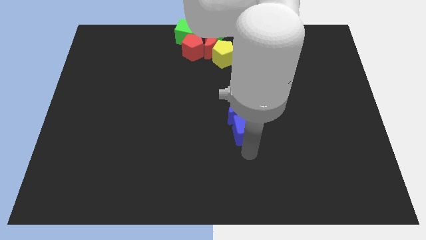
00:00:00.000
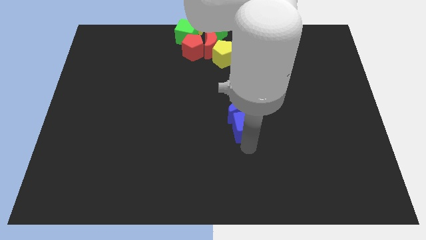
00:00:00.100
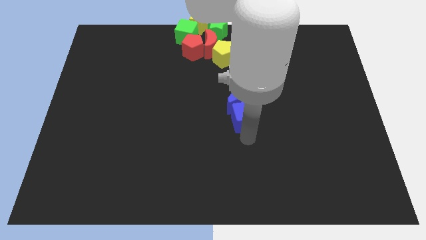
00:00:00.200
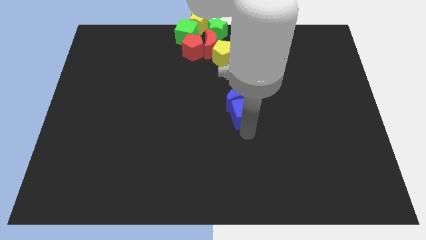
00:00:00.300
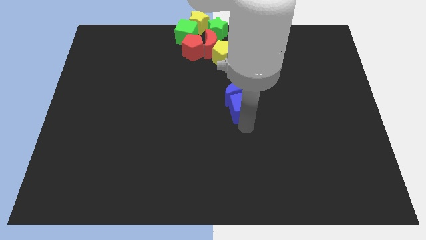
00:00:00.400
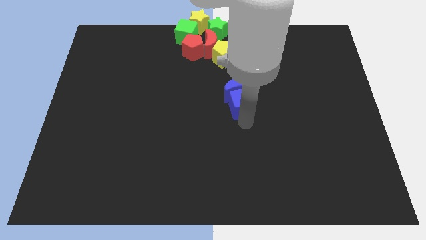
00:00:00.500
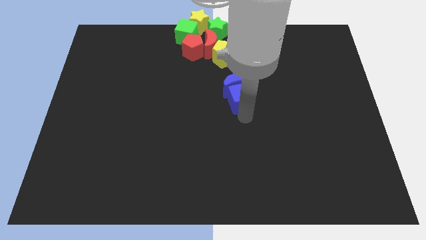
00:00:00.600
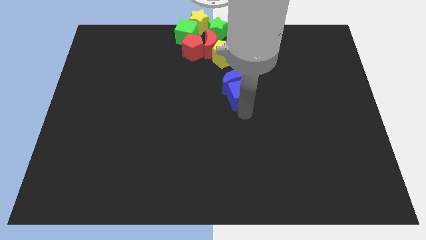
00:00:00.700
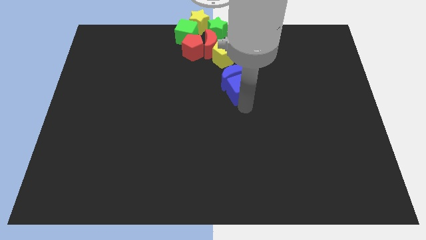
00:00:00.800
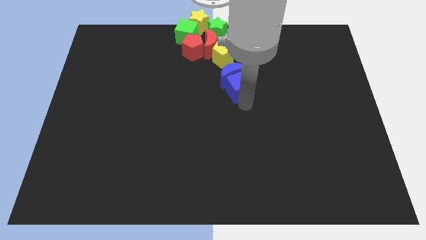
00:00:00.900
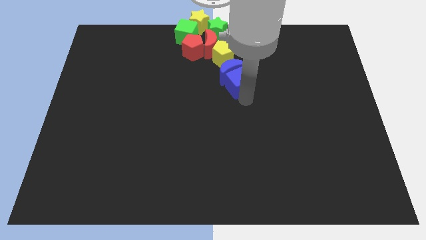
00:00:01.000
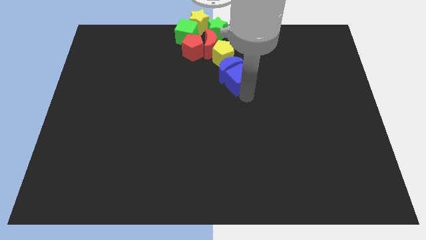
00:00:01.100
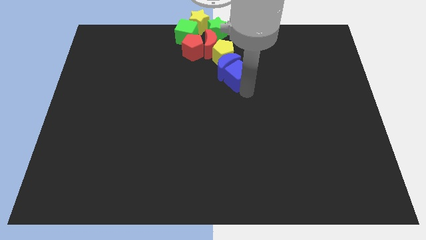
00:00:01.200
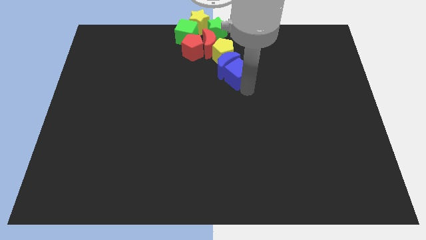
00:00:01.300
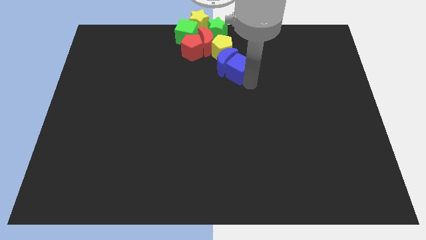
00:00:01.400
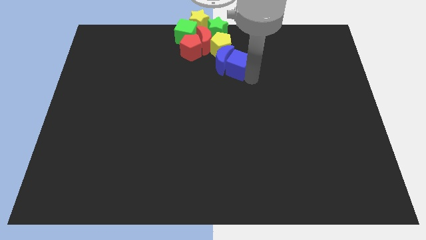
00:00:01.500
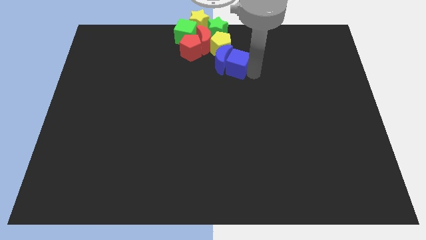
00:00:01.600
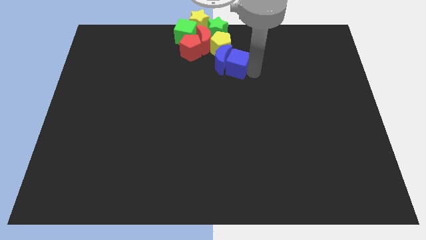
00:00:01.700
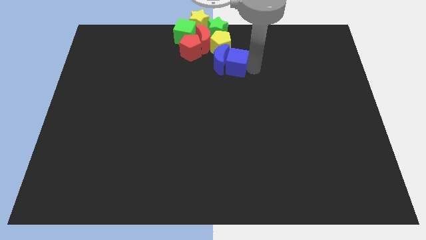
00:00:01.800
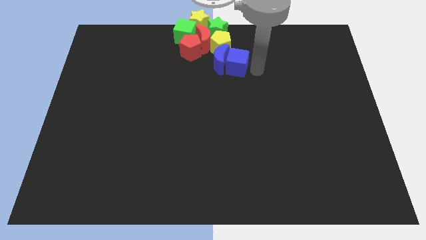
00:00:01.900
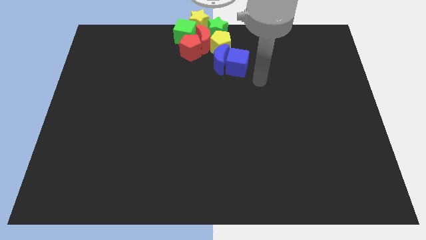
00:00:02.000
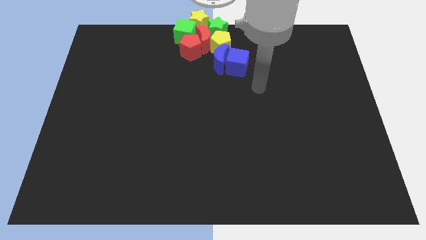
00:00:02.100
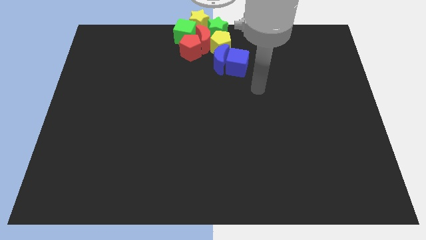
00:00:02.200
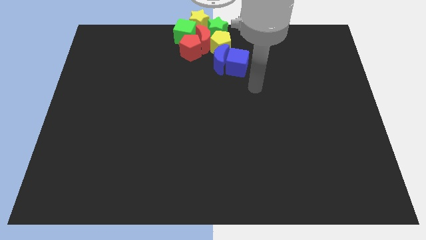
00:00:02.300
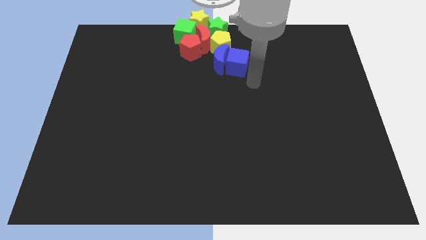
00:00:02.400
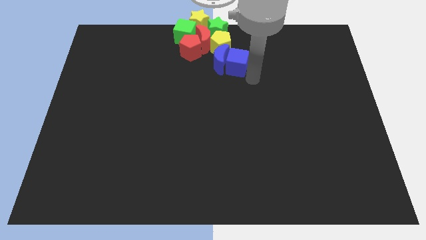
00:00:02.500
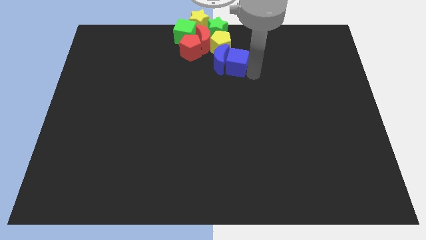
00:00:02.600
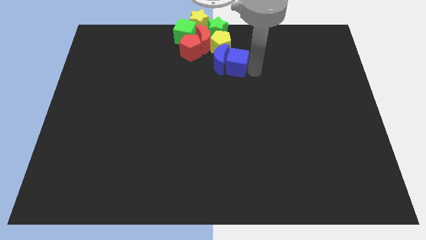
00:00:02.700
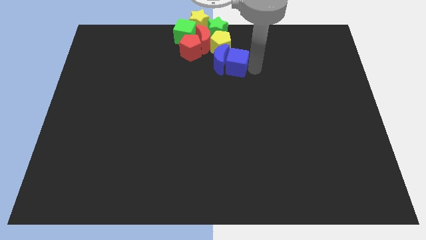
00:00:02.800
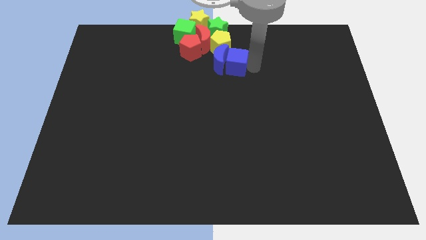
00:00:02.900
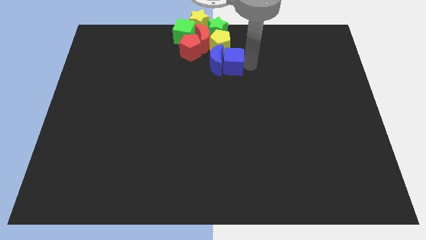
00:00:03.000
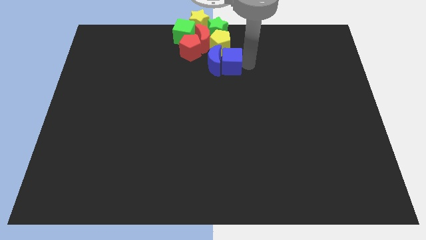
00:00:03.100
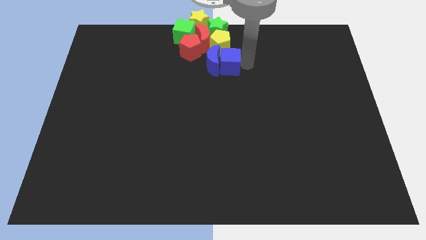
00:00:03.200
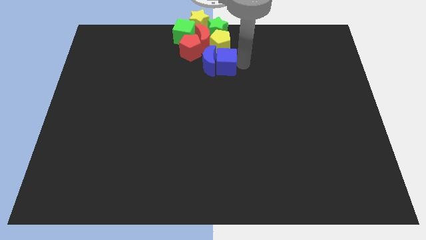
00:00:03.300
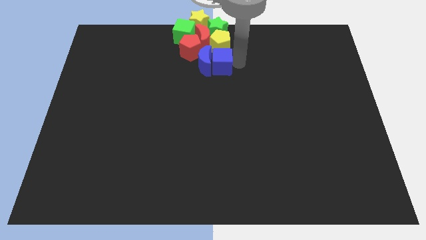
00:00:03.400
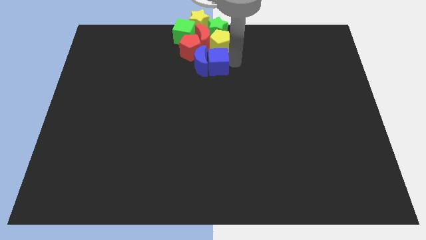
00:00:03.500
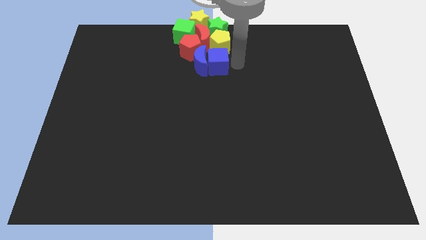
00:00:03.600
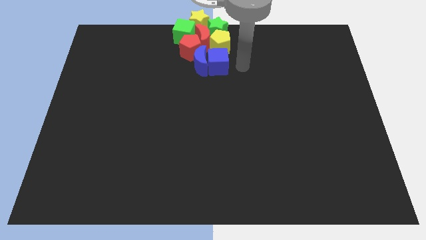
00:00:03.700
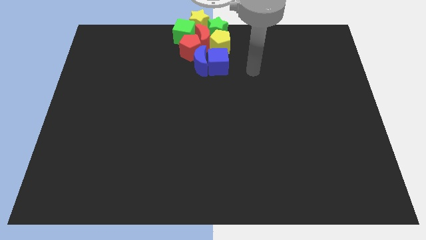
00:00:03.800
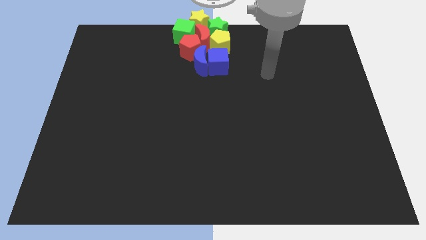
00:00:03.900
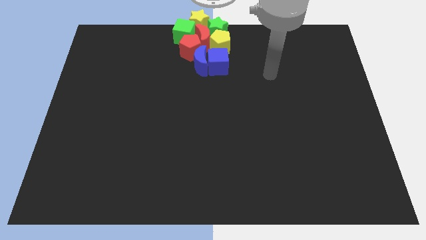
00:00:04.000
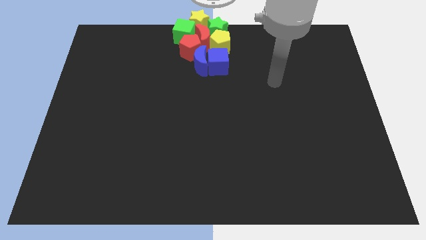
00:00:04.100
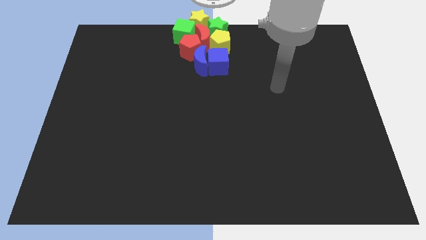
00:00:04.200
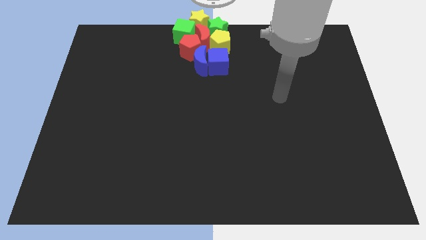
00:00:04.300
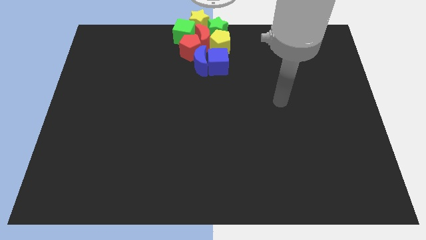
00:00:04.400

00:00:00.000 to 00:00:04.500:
push the blue objects into the group of objects at center top

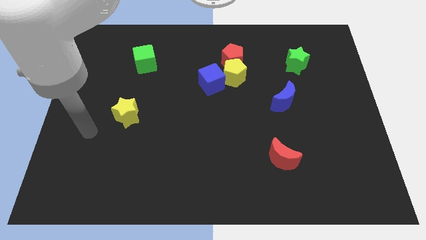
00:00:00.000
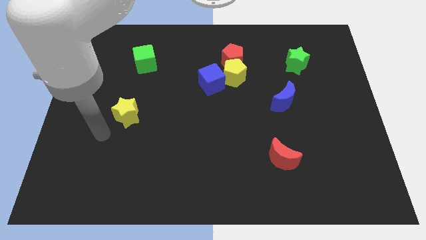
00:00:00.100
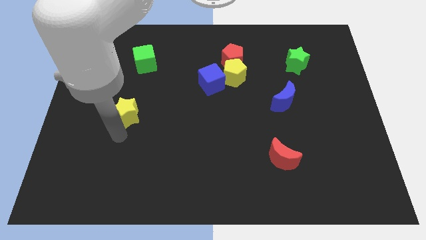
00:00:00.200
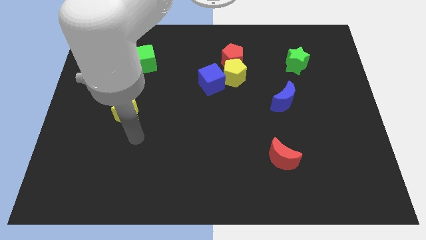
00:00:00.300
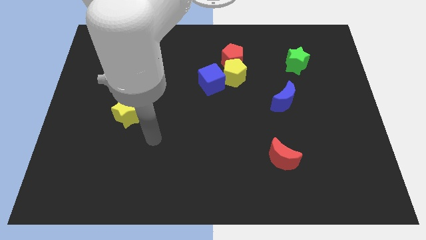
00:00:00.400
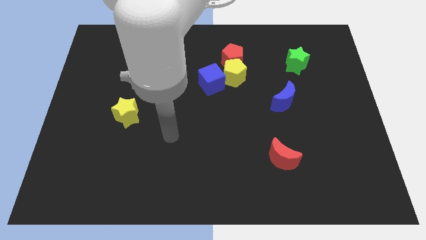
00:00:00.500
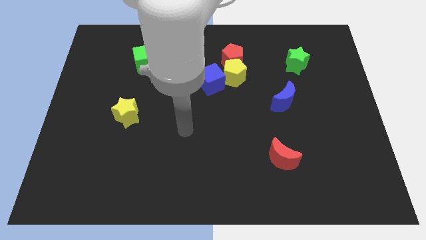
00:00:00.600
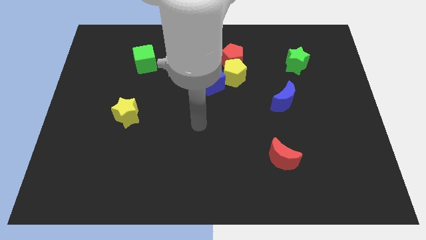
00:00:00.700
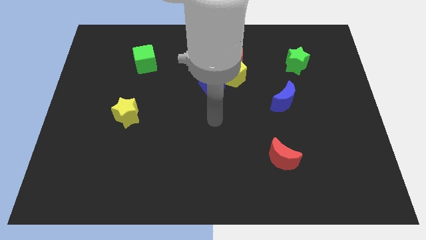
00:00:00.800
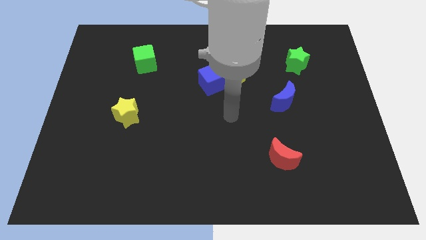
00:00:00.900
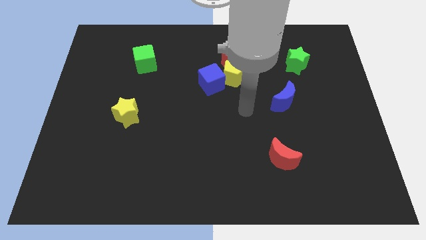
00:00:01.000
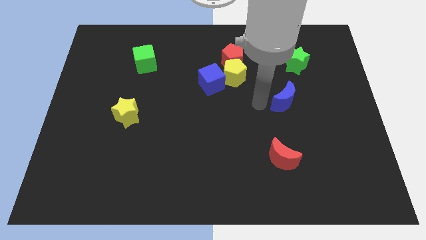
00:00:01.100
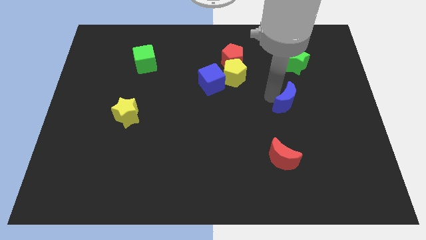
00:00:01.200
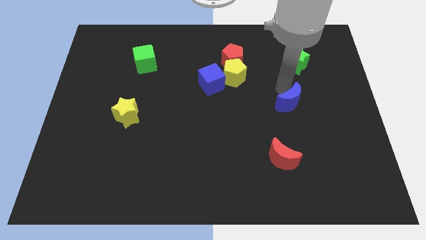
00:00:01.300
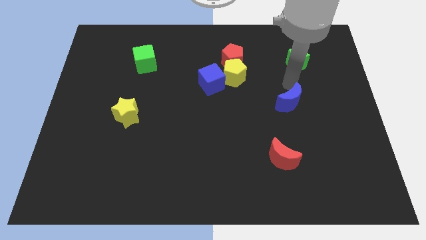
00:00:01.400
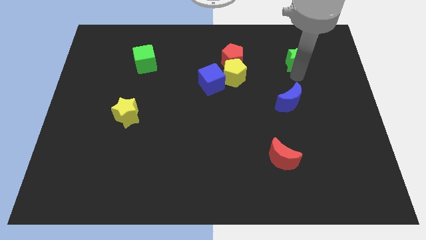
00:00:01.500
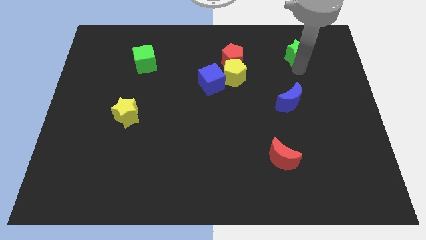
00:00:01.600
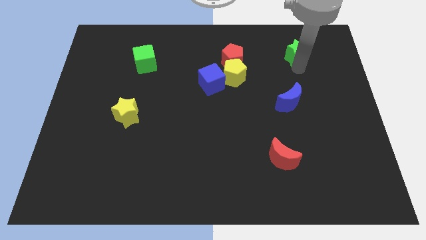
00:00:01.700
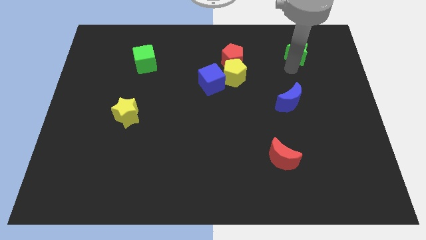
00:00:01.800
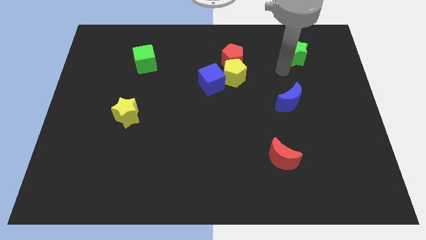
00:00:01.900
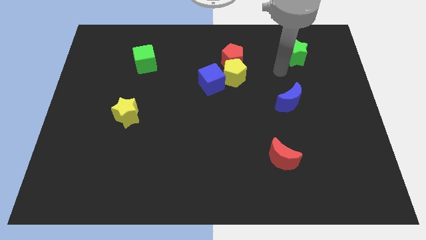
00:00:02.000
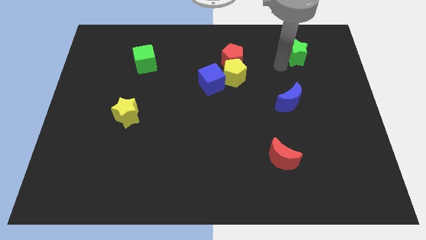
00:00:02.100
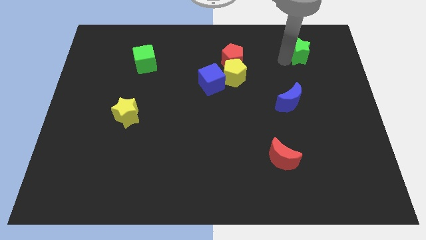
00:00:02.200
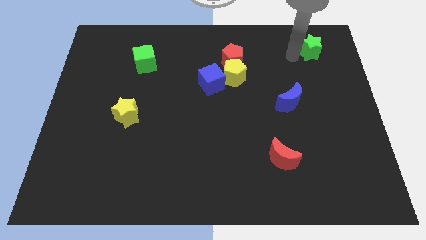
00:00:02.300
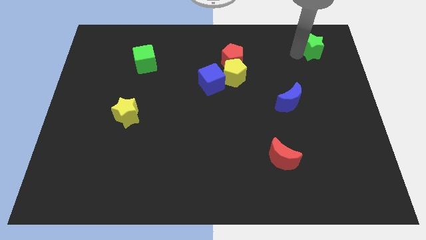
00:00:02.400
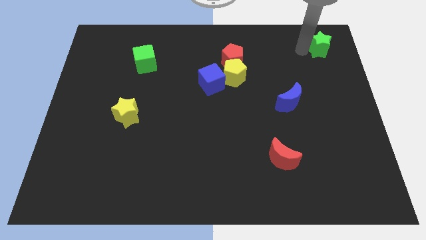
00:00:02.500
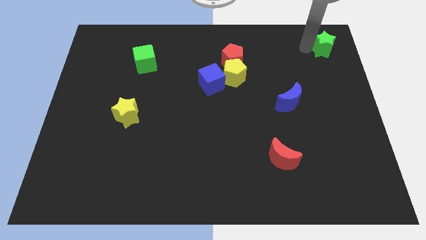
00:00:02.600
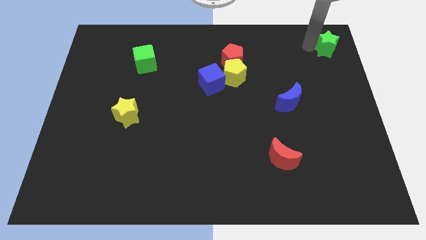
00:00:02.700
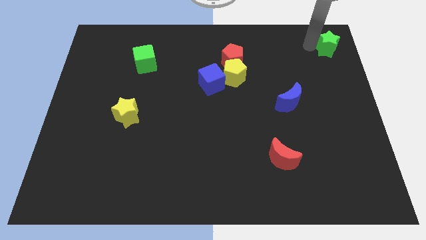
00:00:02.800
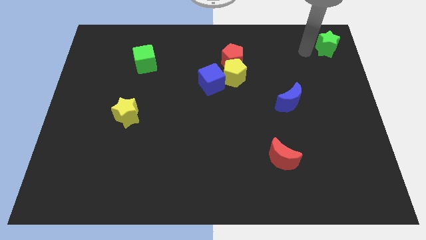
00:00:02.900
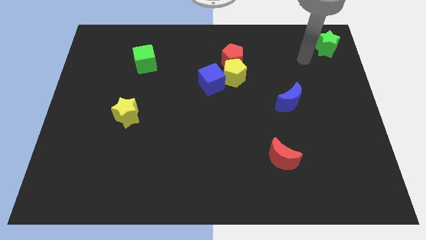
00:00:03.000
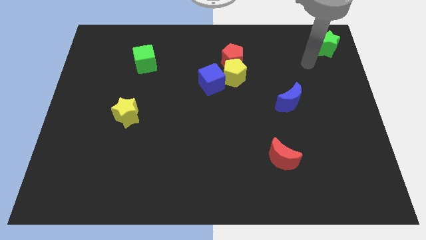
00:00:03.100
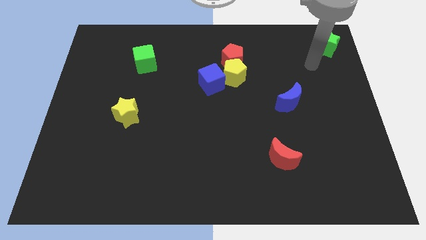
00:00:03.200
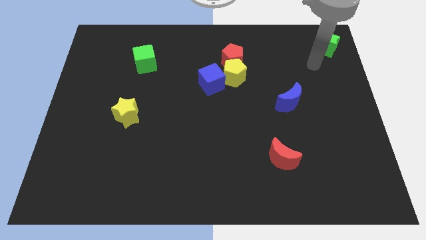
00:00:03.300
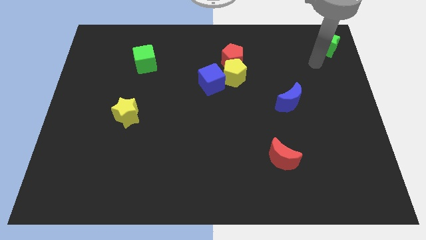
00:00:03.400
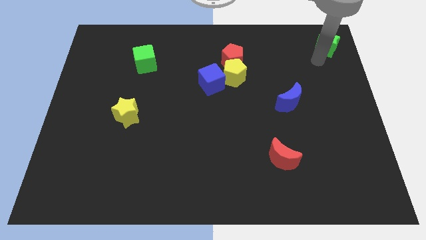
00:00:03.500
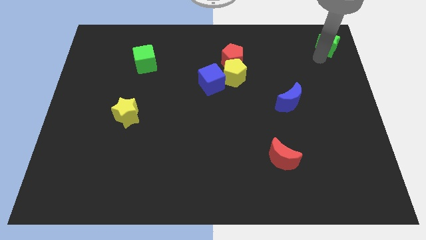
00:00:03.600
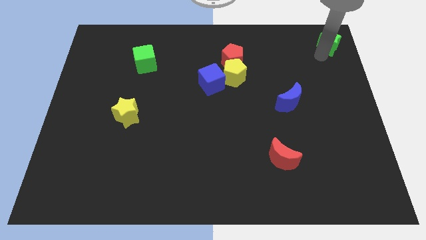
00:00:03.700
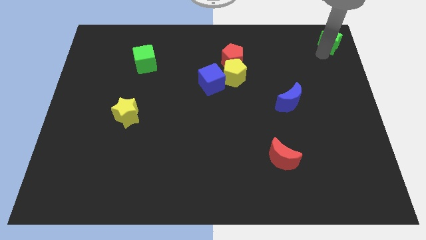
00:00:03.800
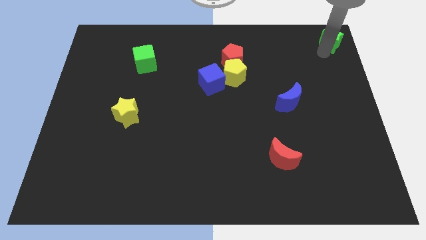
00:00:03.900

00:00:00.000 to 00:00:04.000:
push the green star diagonally to blue moon

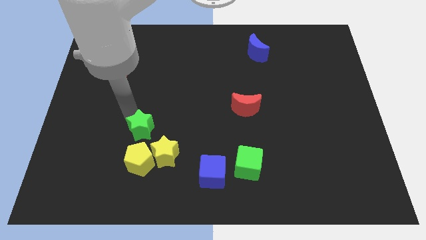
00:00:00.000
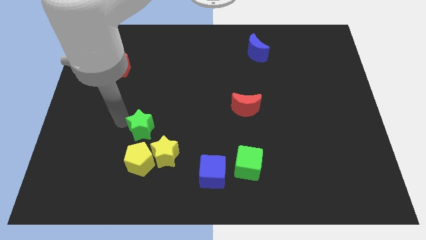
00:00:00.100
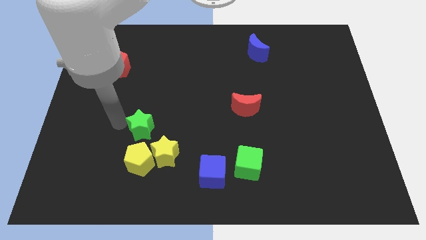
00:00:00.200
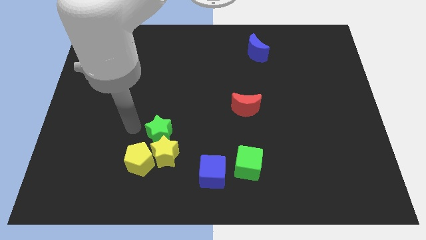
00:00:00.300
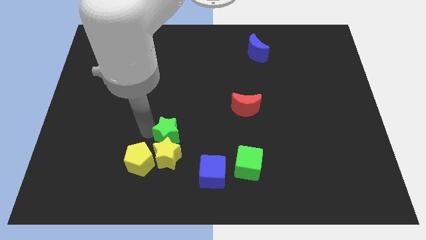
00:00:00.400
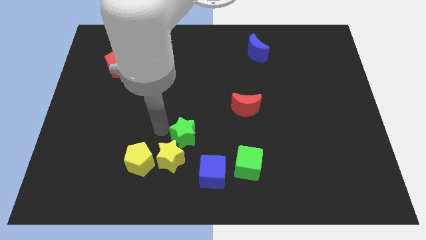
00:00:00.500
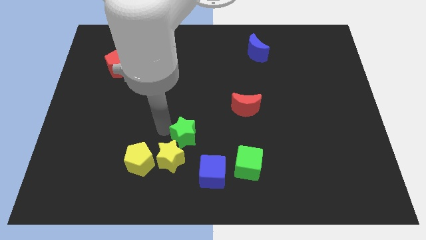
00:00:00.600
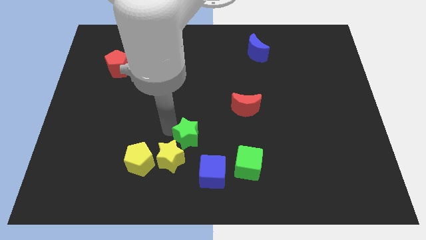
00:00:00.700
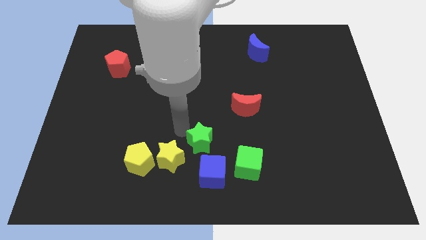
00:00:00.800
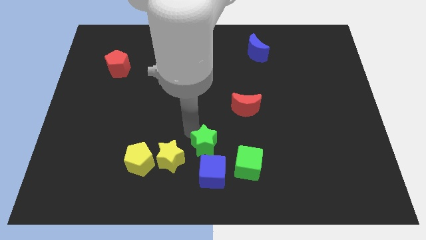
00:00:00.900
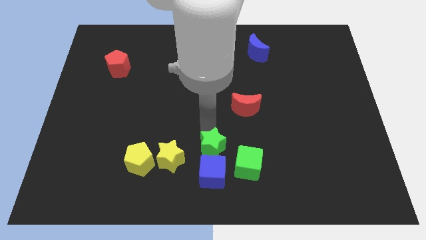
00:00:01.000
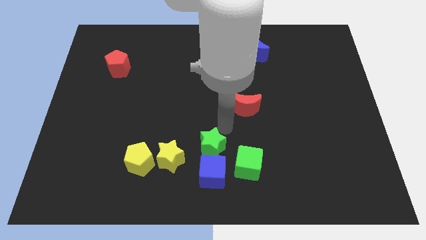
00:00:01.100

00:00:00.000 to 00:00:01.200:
push the green star to the top of the blue cube
